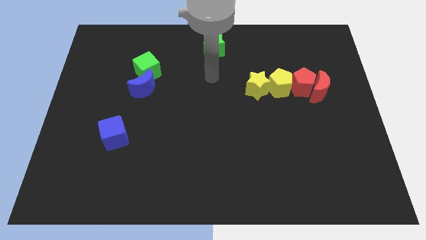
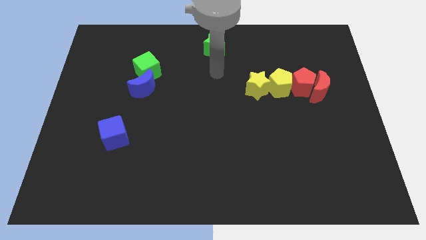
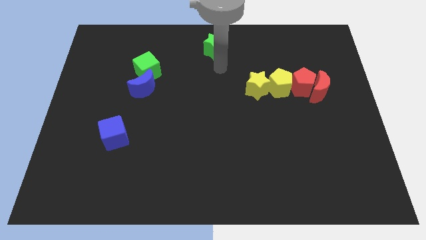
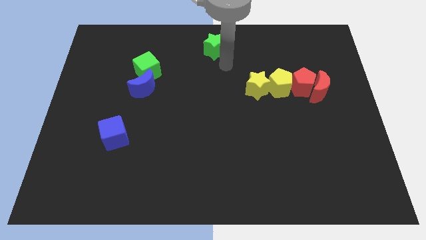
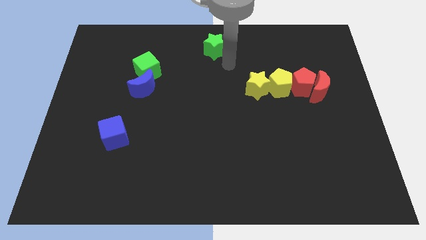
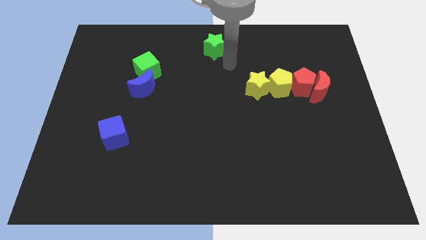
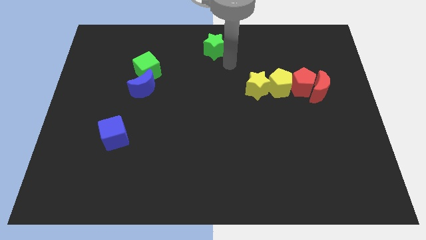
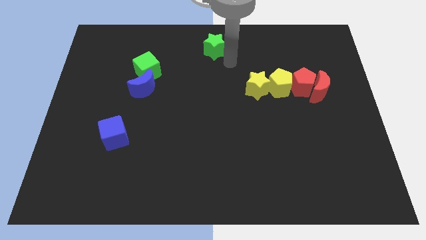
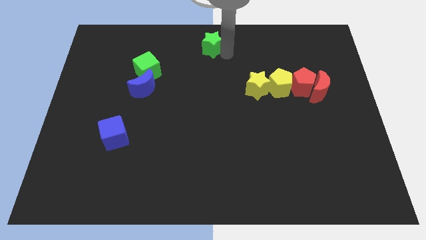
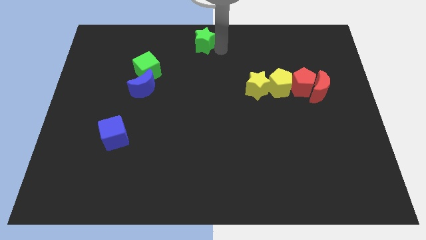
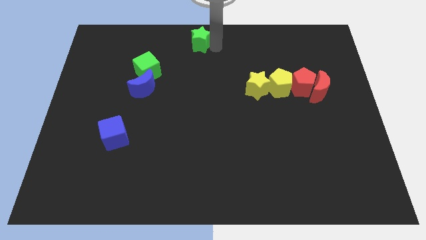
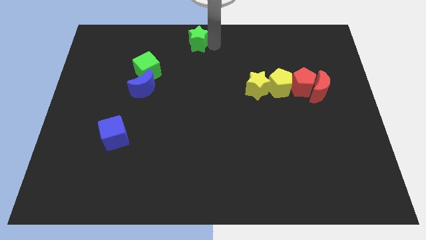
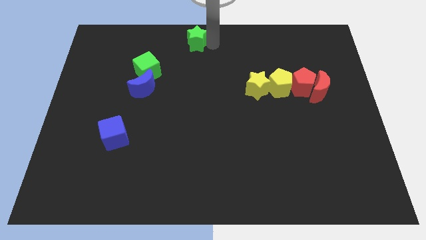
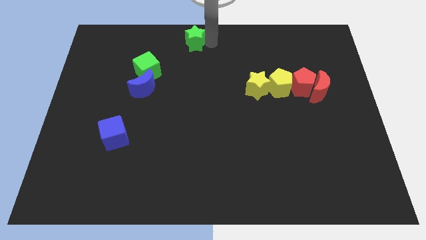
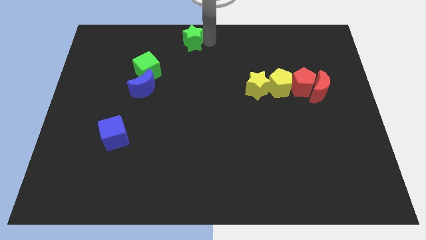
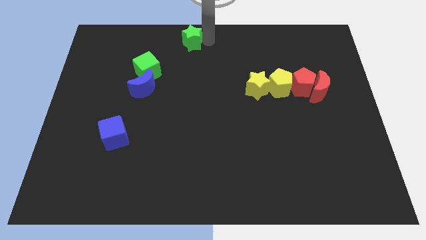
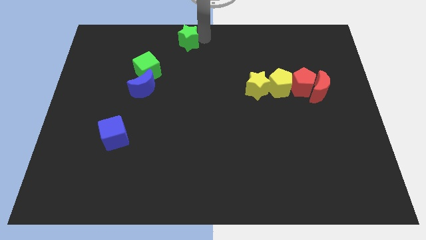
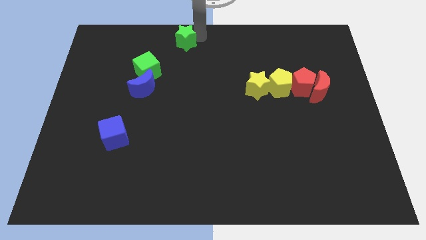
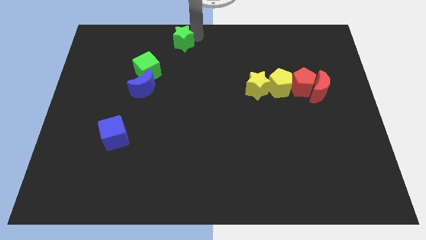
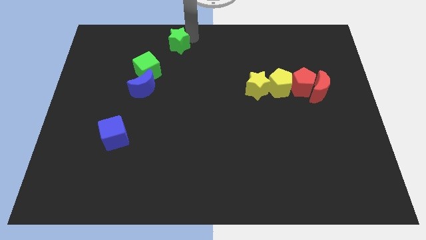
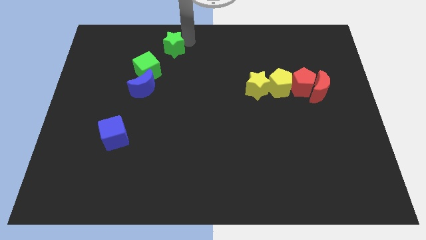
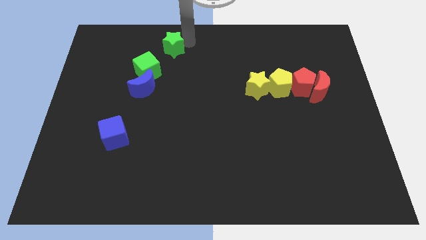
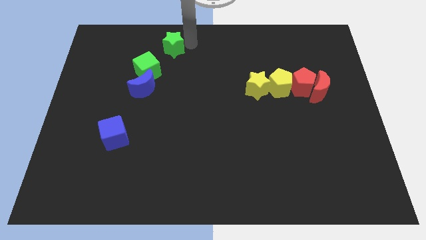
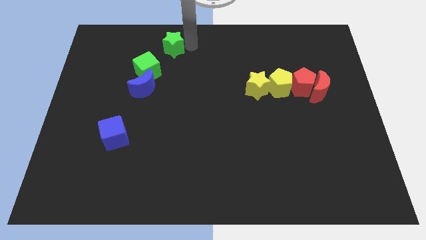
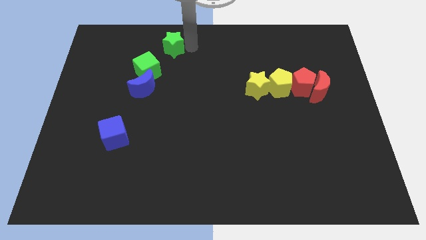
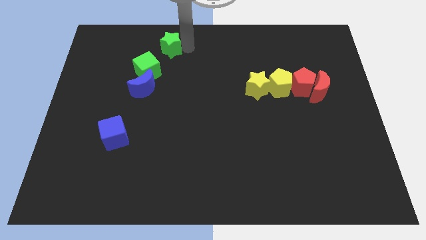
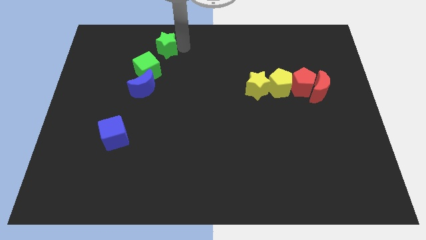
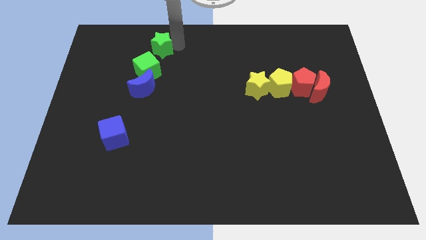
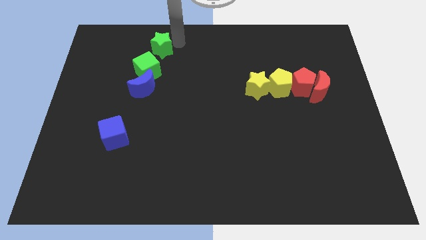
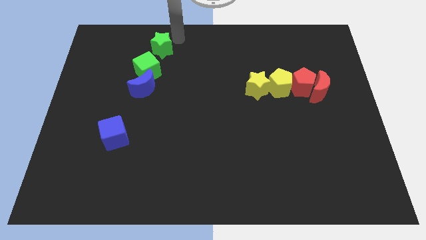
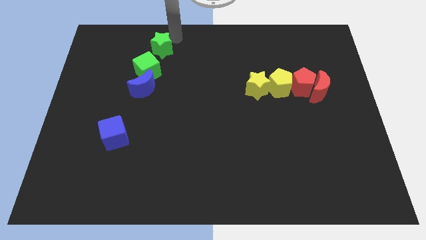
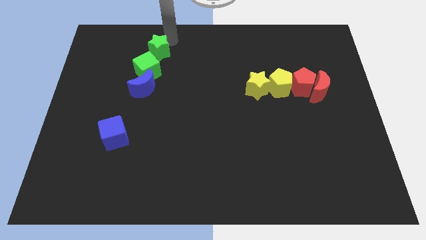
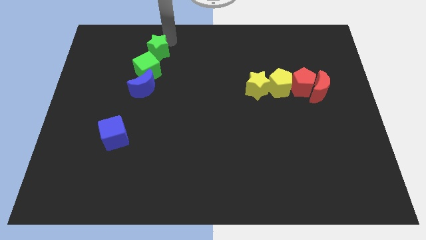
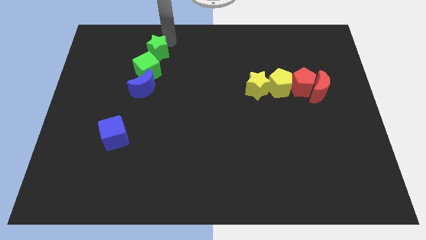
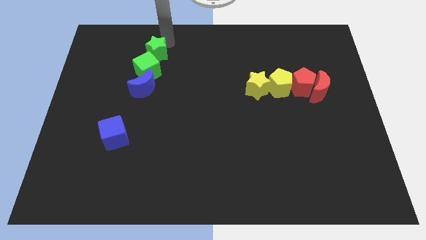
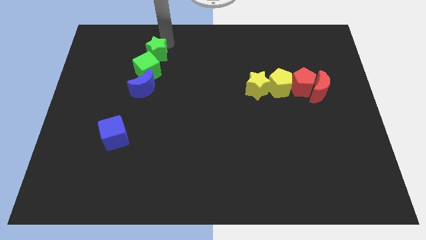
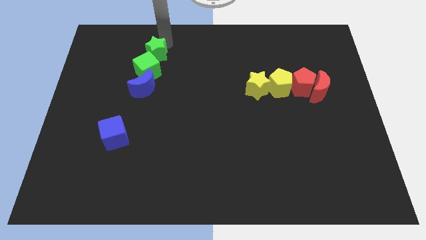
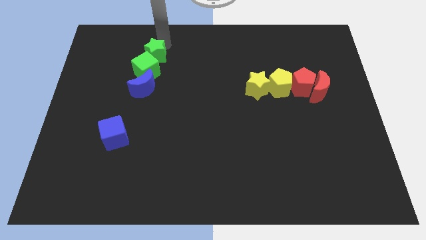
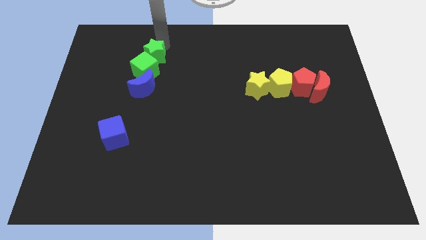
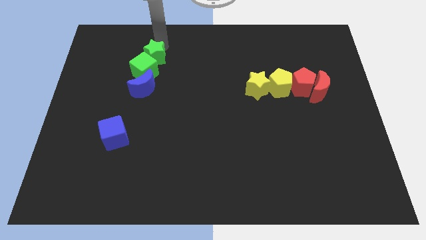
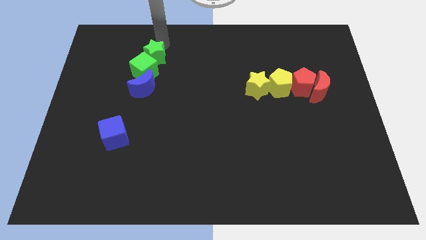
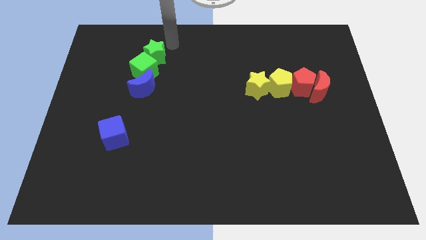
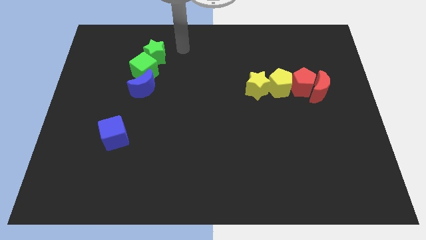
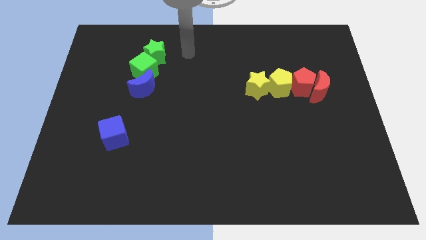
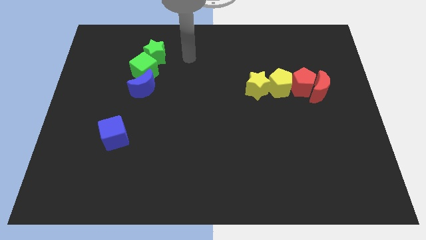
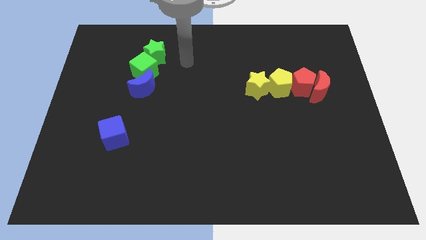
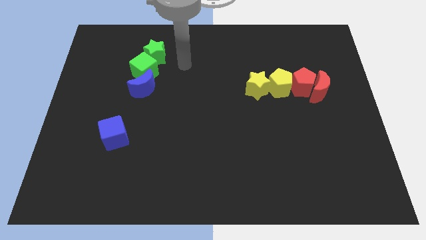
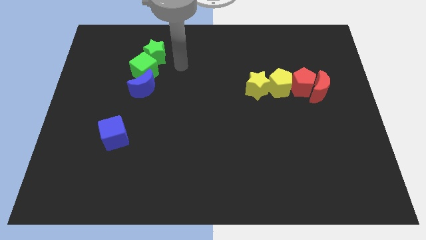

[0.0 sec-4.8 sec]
place the green star diagonally close to the green cube

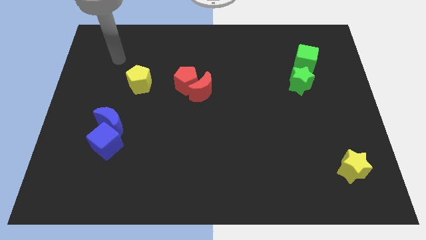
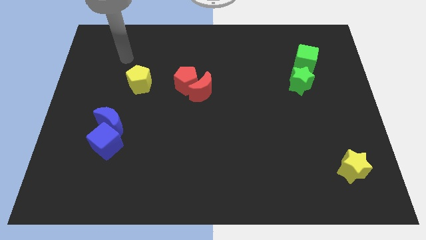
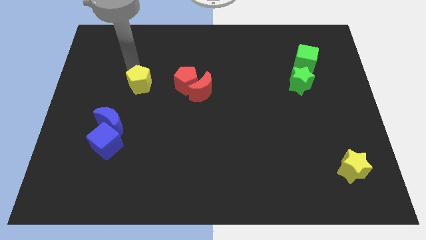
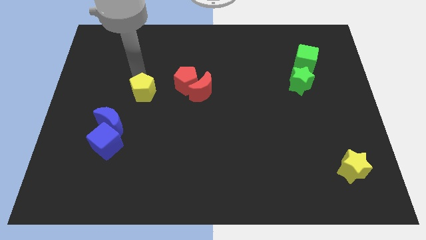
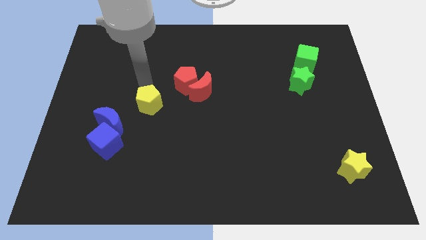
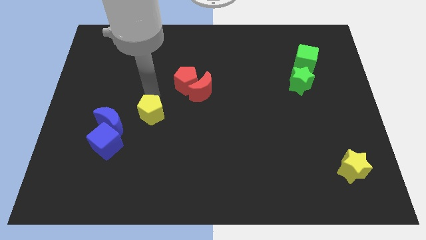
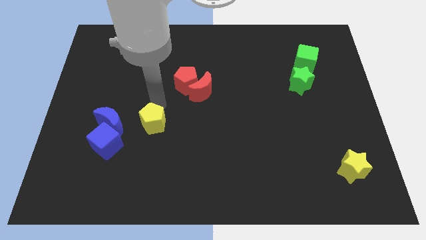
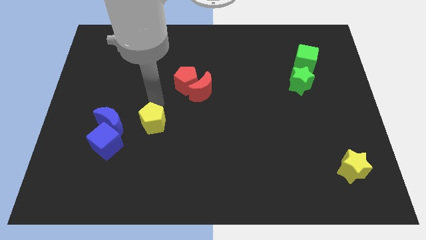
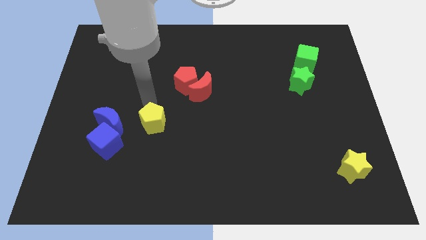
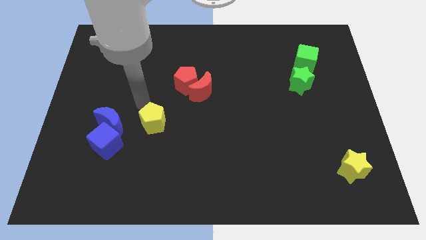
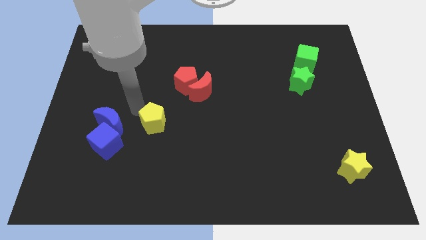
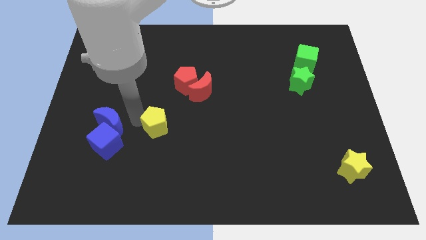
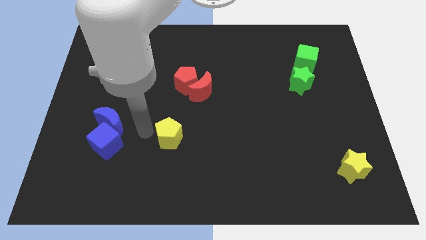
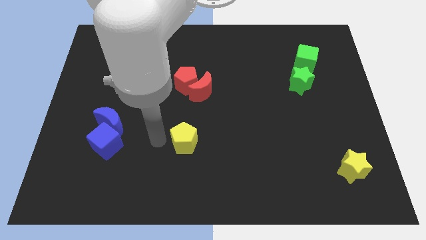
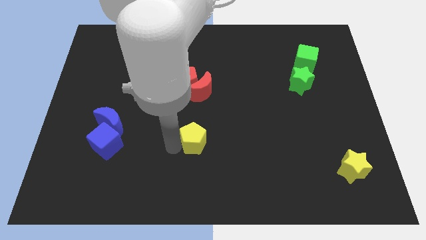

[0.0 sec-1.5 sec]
put the yellow pentagon vertically below the red blocks

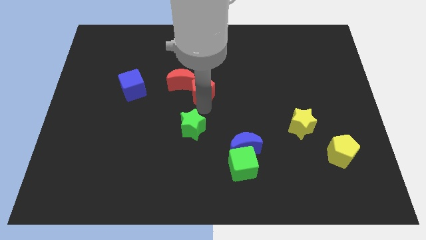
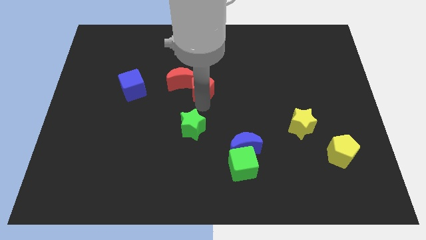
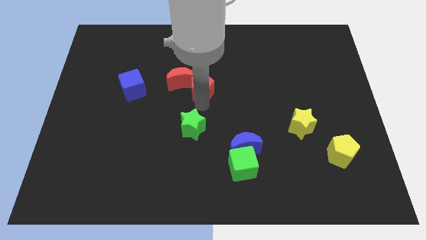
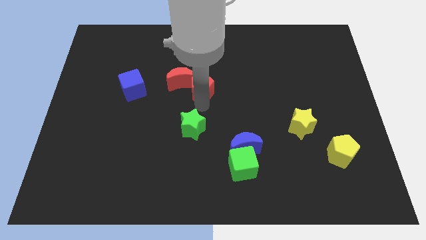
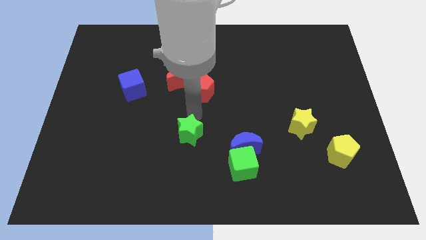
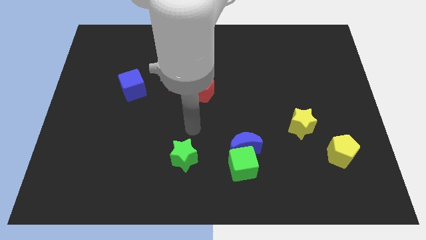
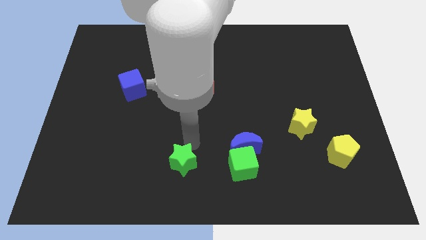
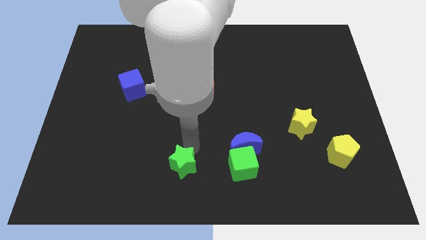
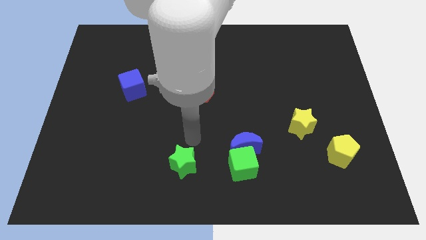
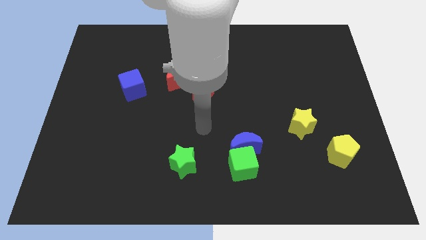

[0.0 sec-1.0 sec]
move green star towards the bottom of the board

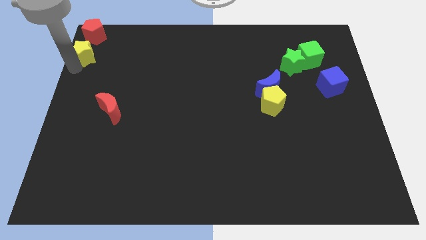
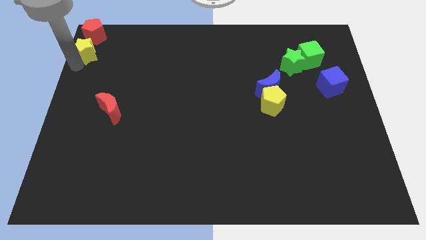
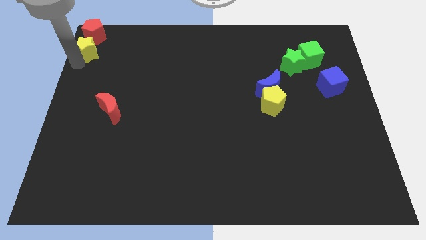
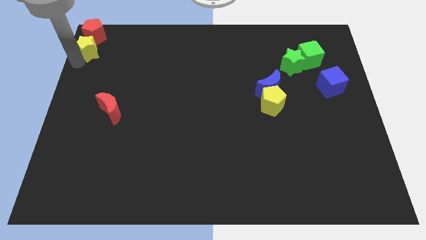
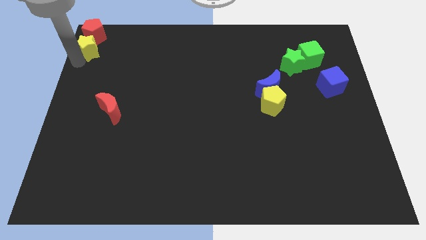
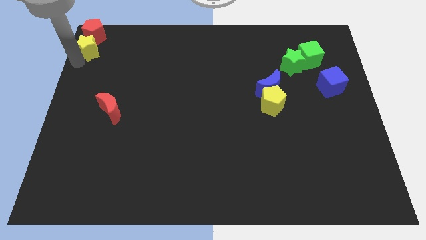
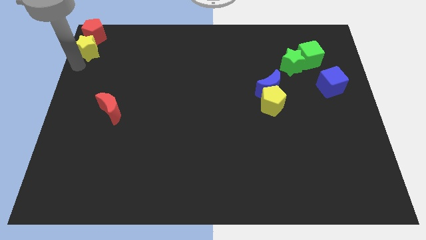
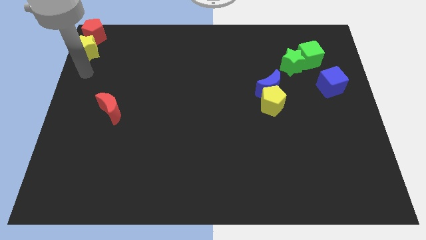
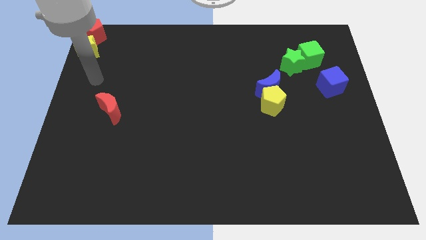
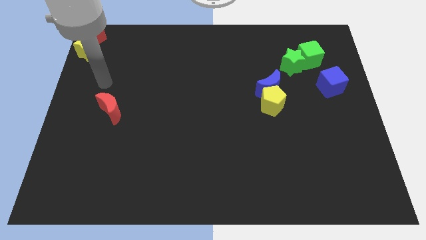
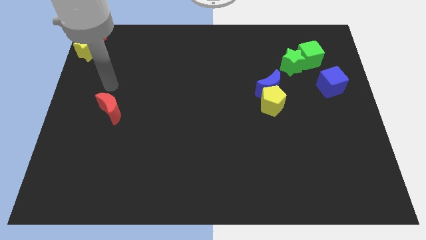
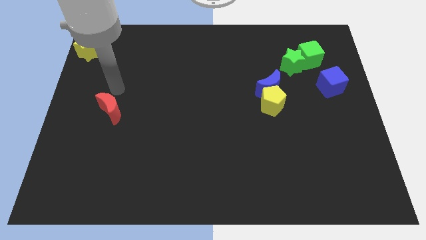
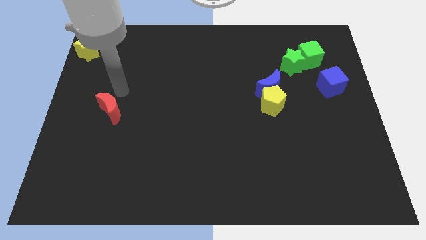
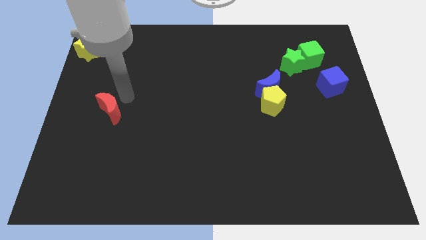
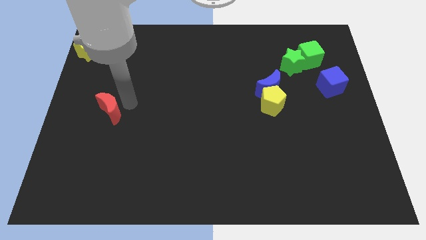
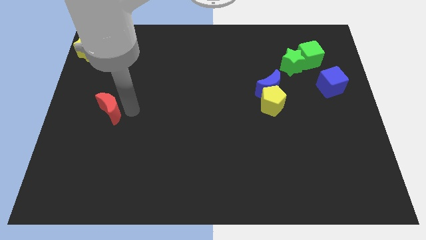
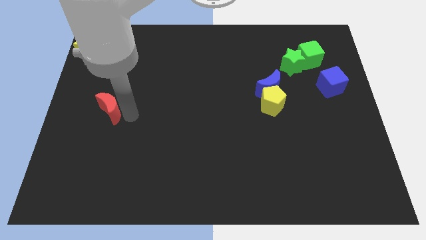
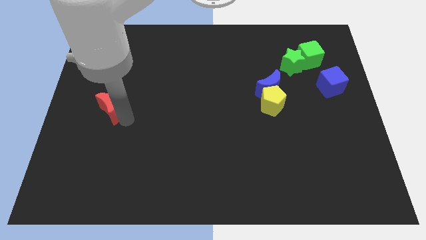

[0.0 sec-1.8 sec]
place the arm to the left of the red moon
